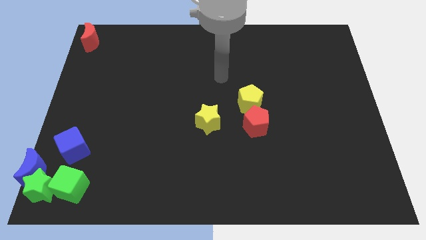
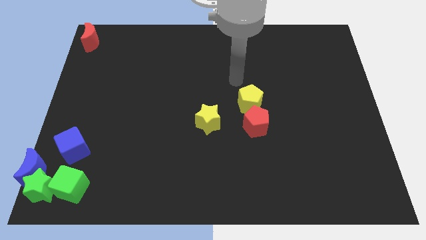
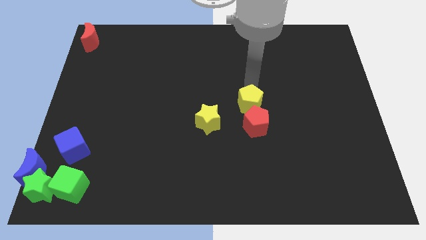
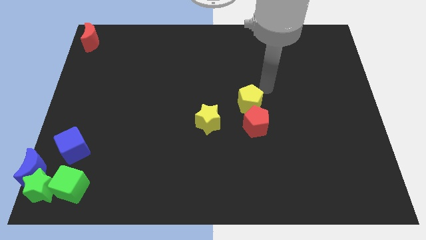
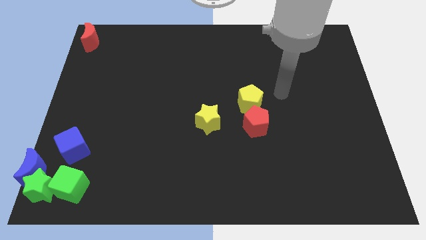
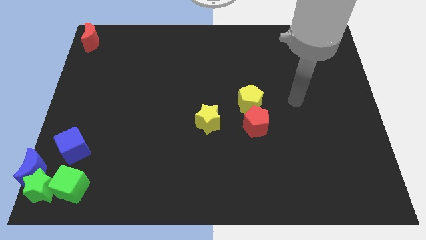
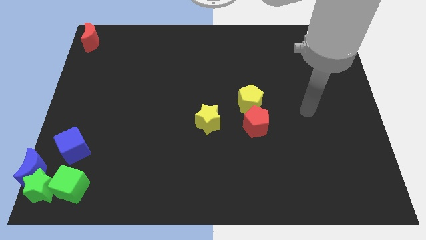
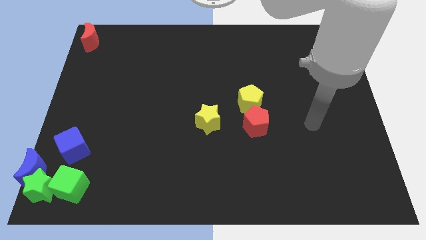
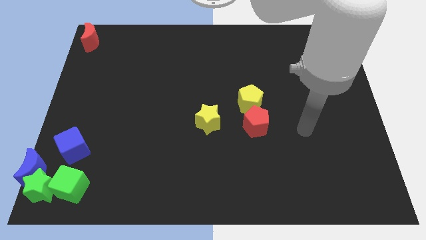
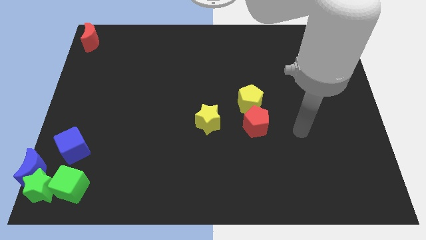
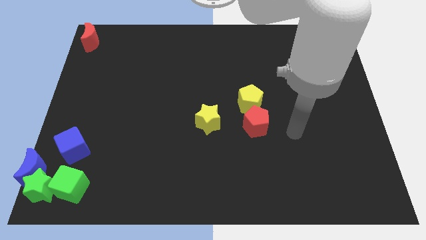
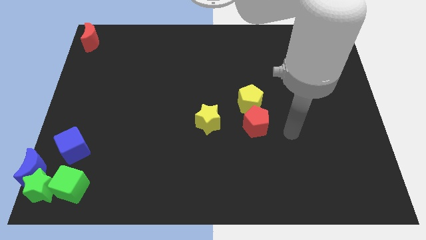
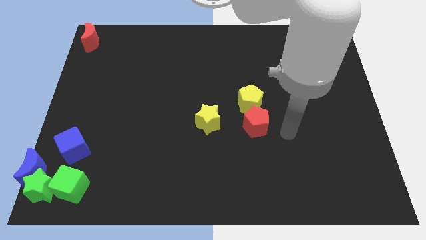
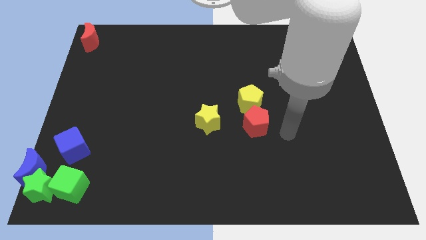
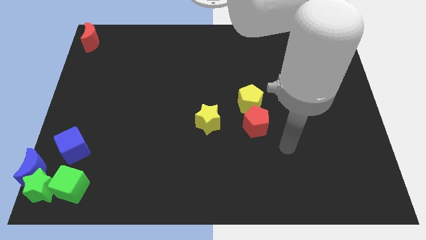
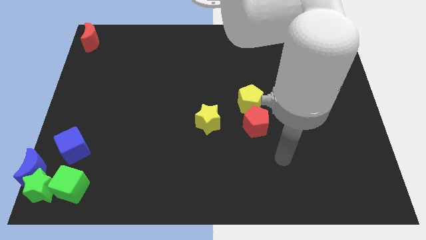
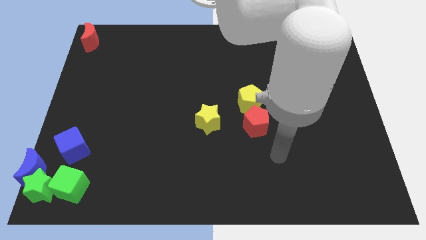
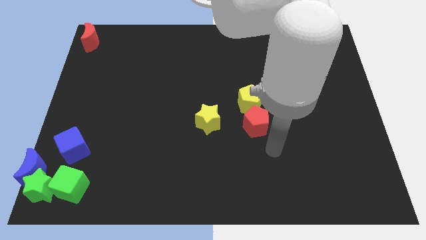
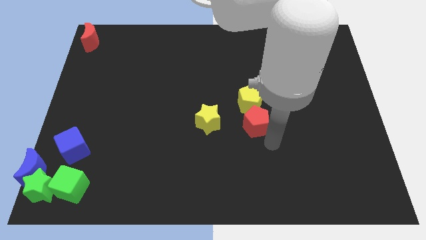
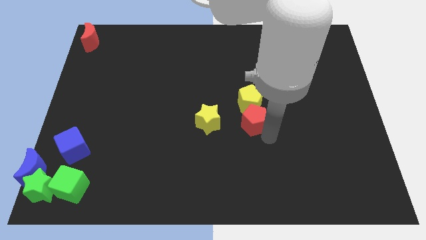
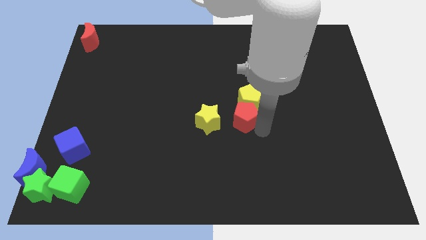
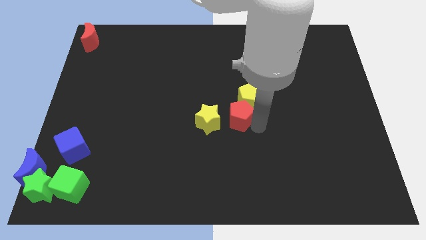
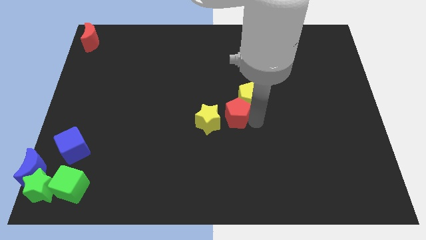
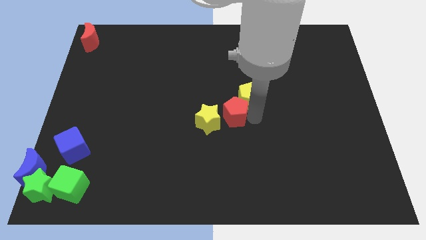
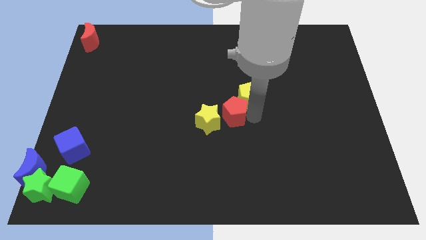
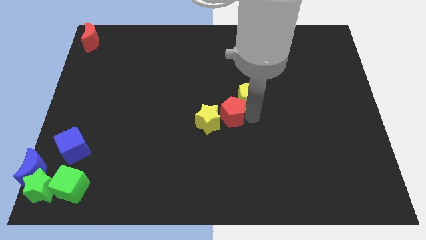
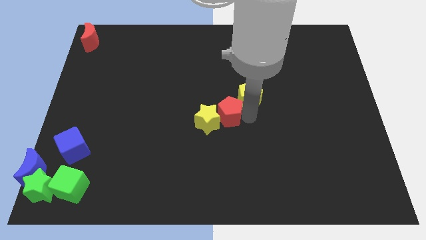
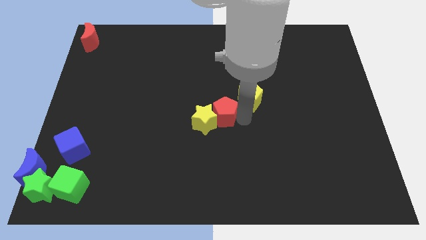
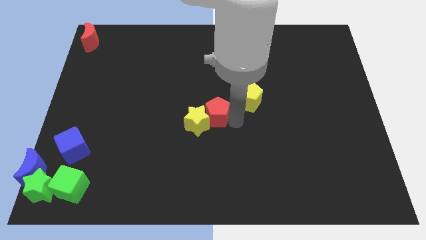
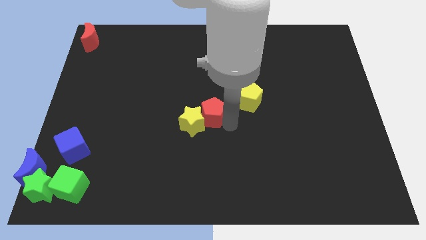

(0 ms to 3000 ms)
place the red pentagon in between yellow star and yellow pentagon

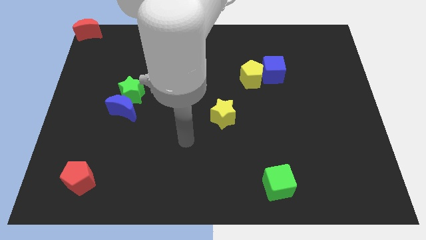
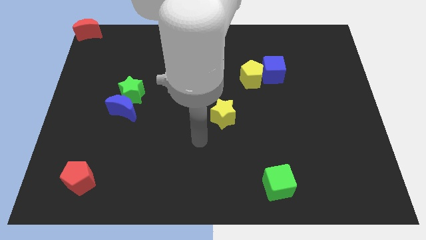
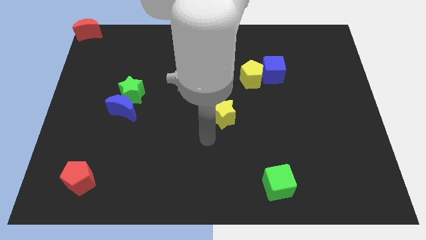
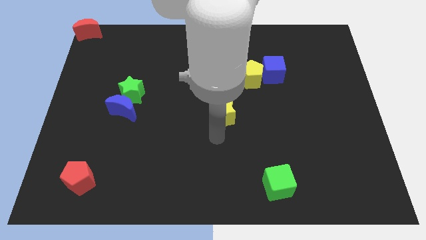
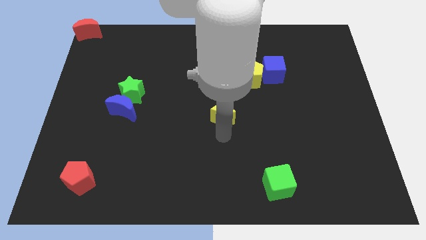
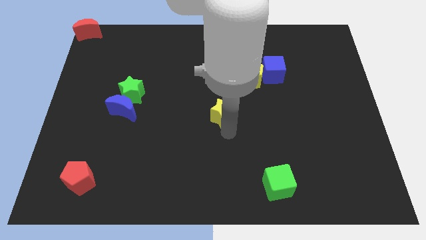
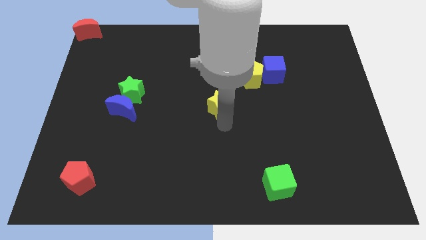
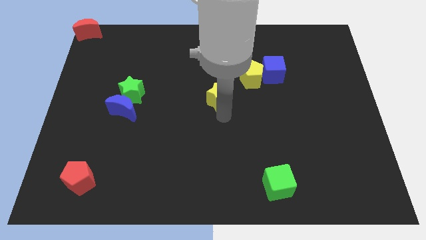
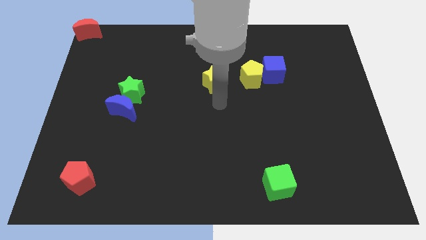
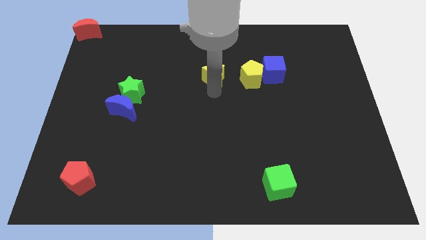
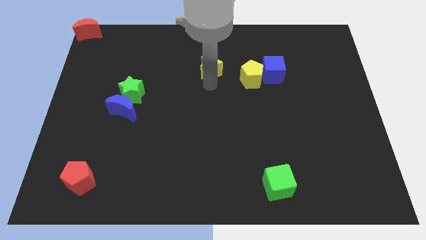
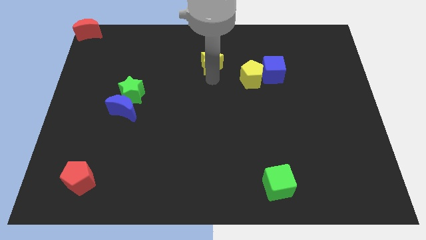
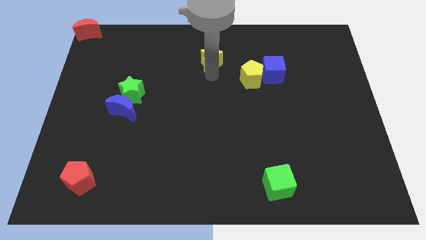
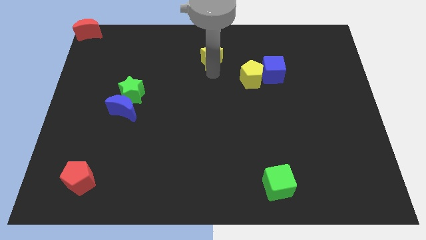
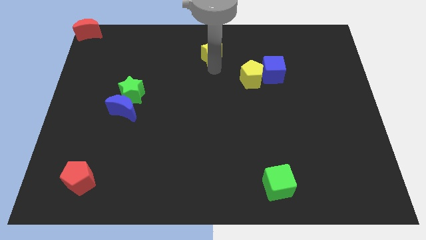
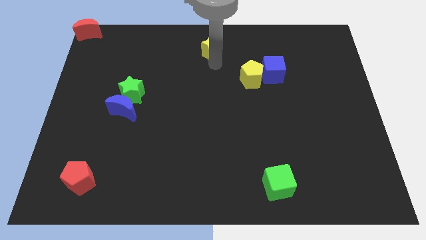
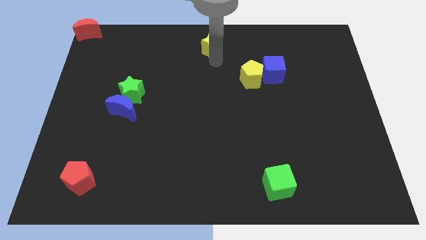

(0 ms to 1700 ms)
put the yellow star diagonally top left to the yellow pentagon

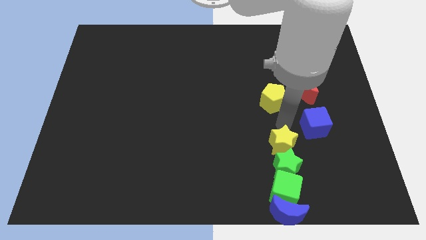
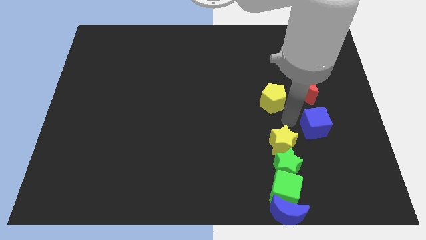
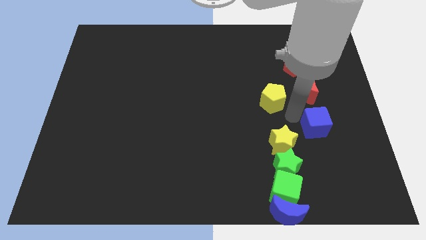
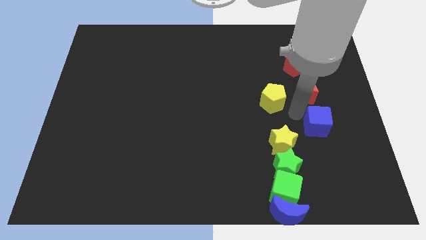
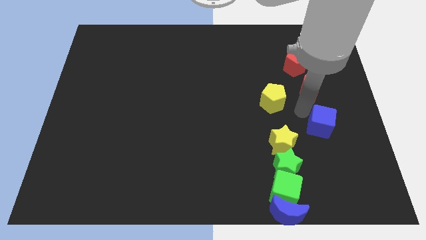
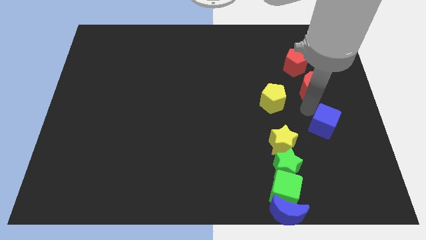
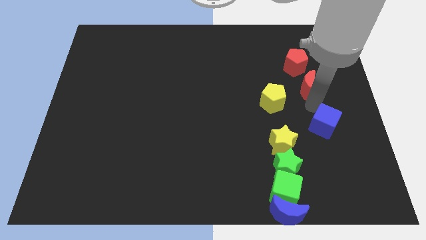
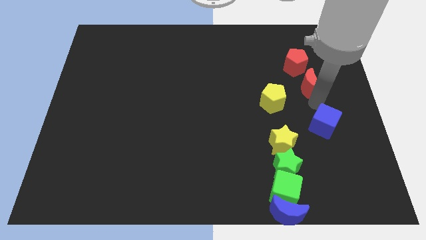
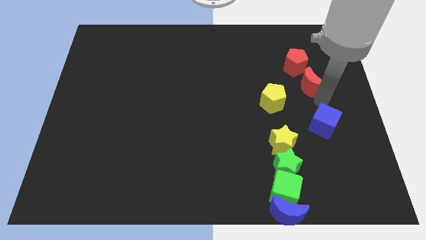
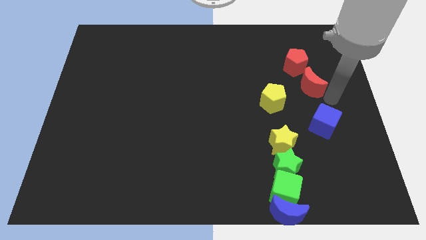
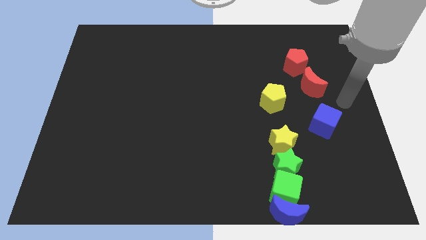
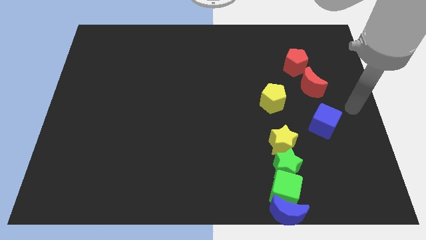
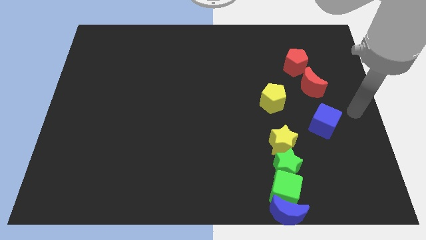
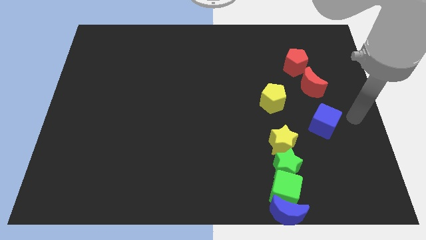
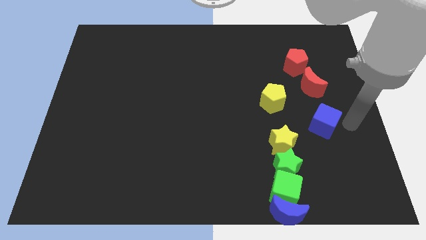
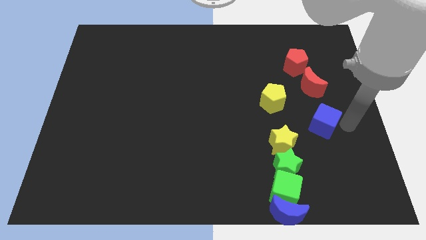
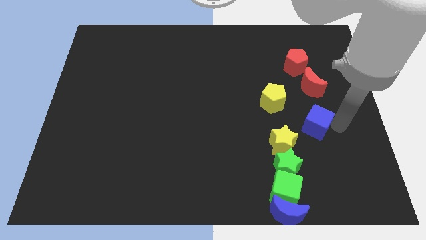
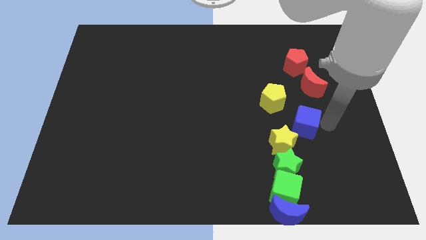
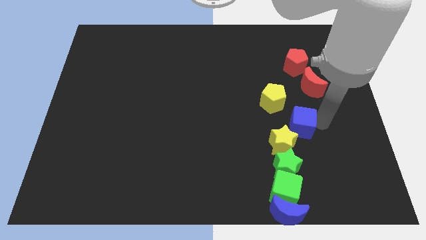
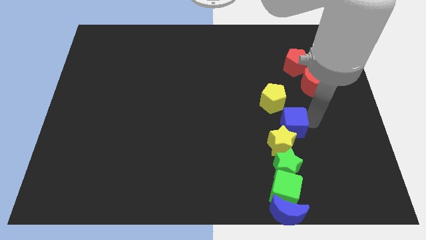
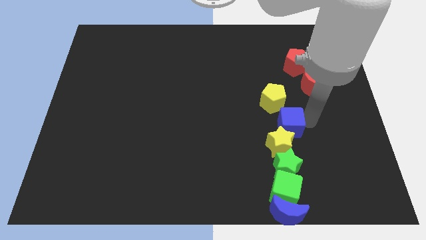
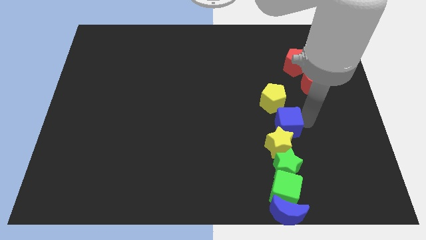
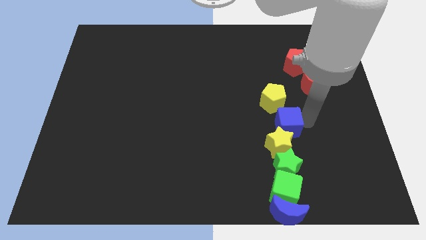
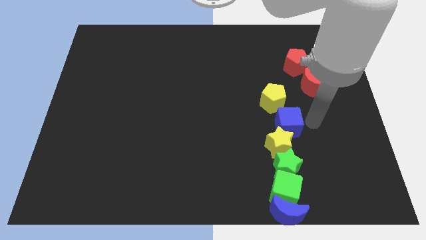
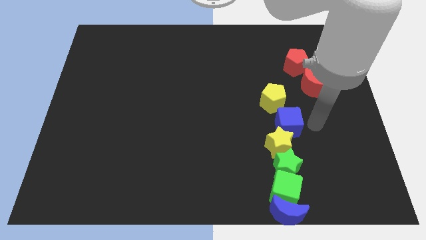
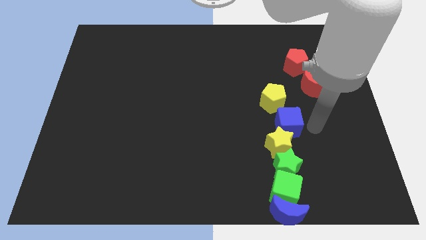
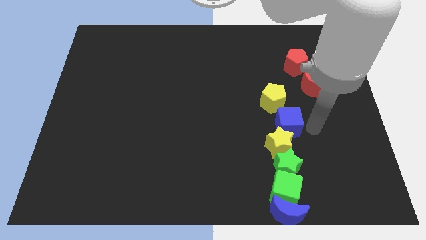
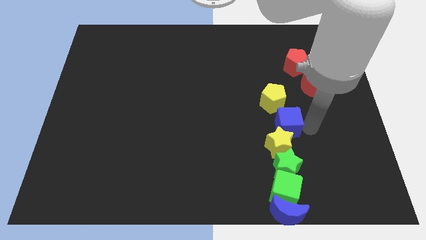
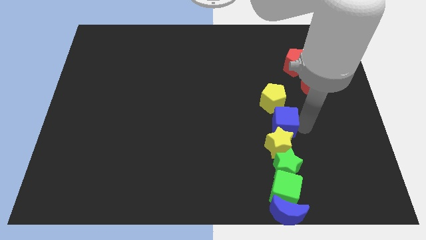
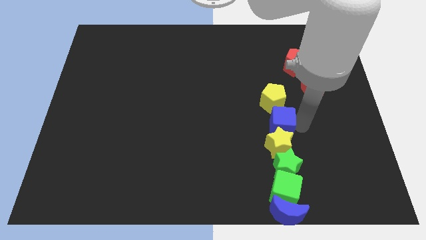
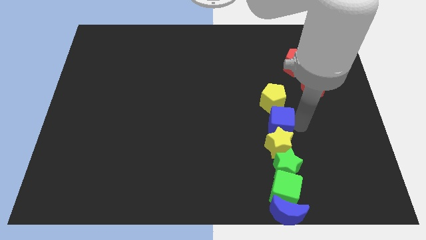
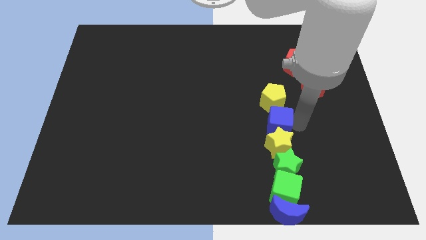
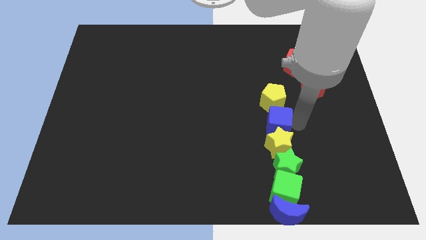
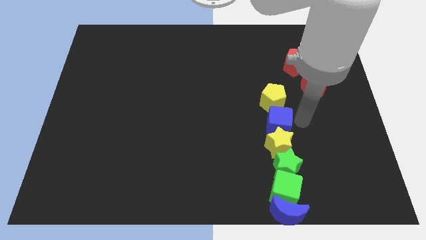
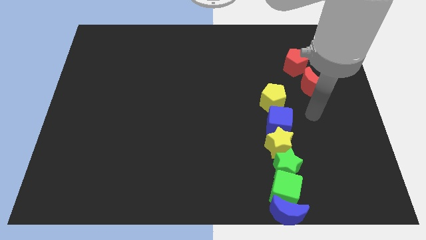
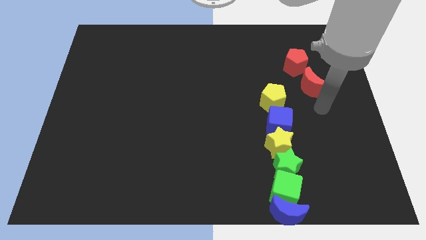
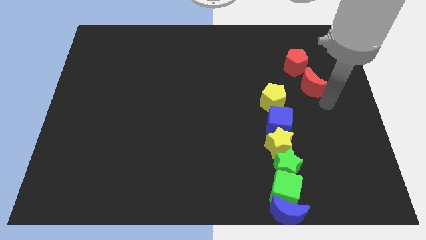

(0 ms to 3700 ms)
place the blue cube in between both the yellow blocks

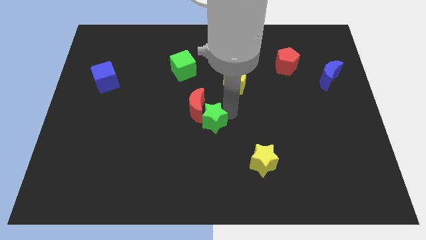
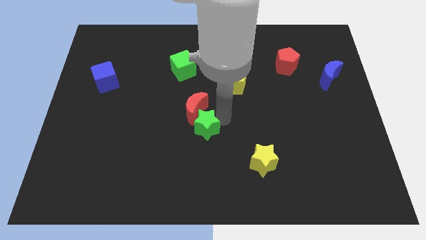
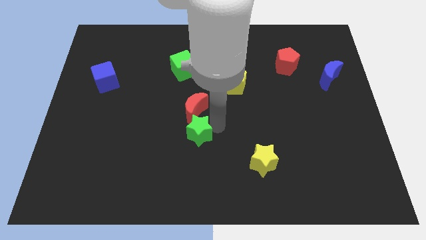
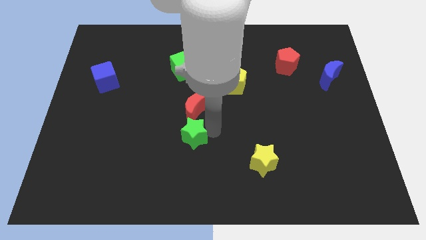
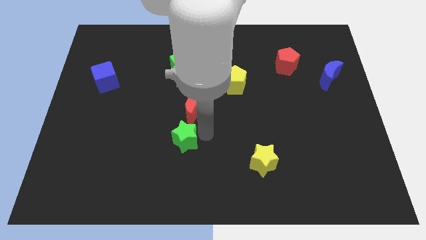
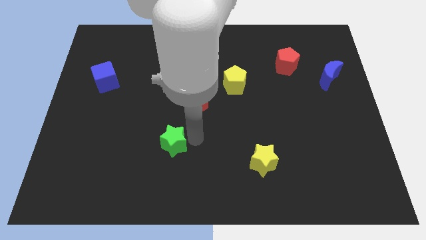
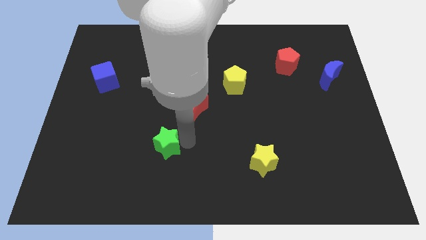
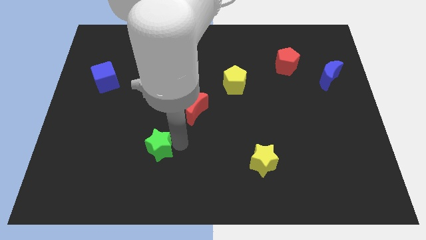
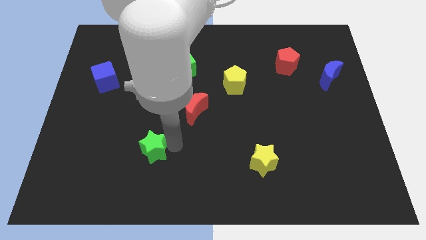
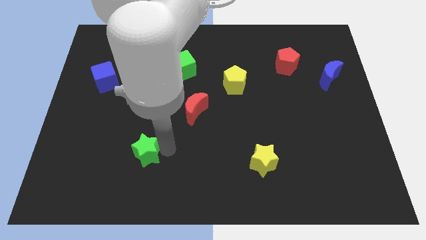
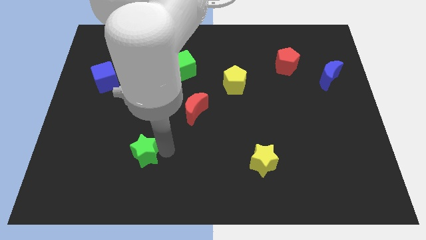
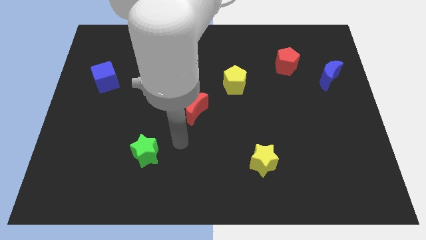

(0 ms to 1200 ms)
separate the green star from the red crescent
